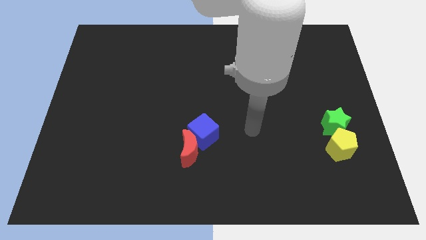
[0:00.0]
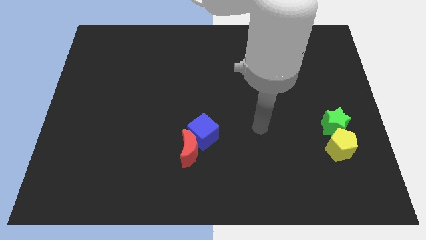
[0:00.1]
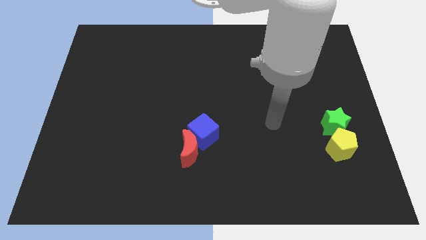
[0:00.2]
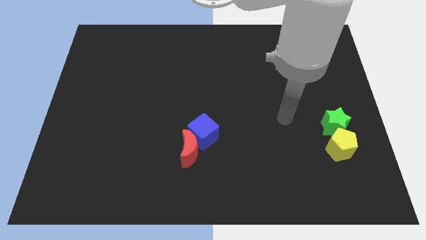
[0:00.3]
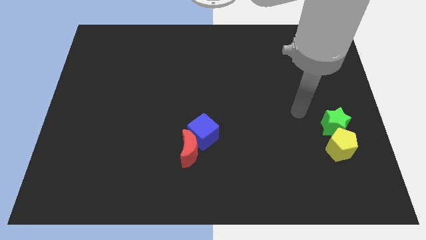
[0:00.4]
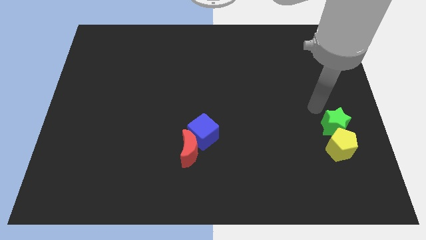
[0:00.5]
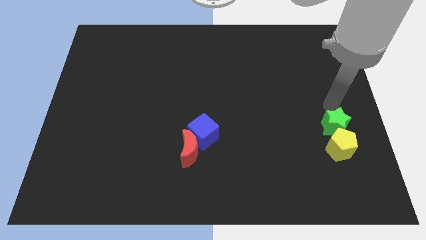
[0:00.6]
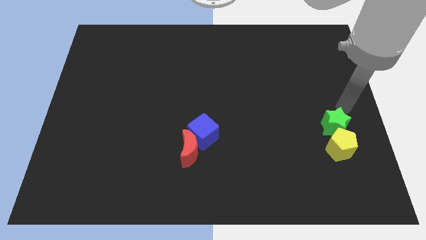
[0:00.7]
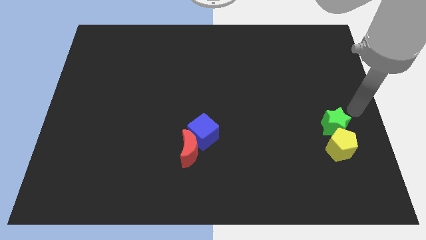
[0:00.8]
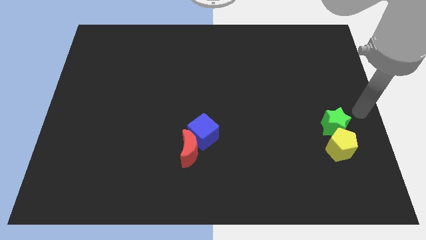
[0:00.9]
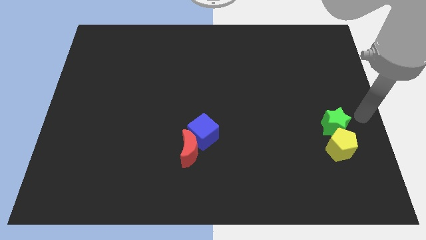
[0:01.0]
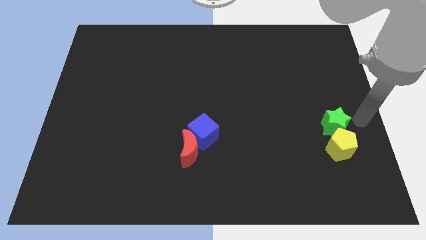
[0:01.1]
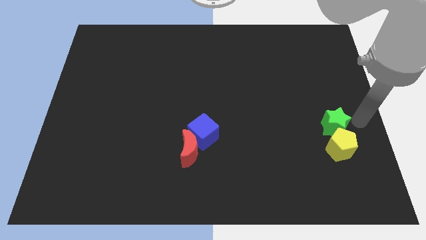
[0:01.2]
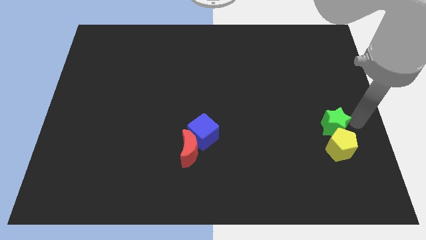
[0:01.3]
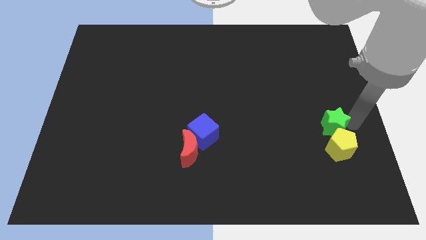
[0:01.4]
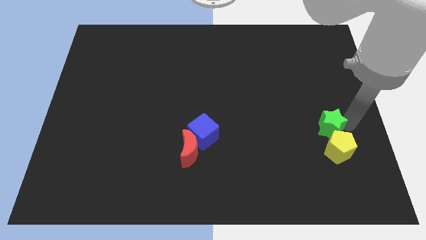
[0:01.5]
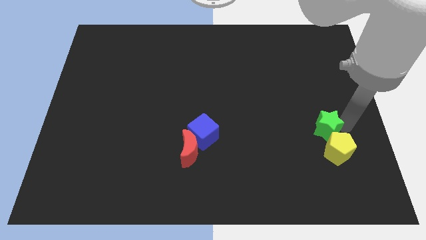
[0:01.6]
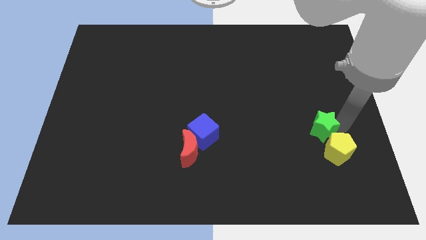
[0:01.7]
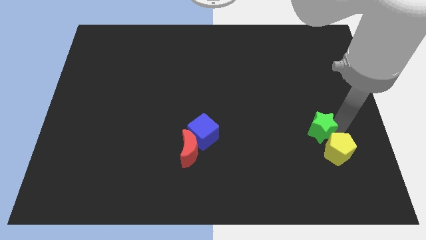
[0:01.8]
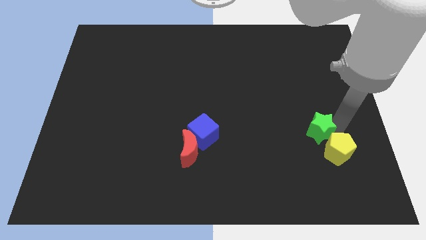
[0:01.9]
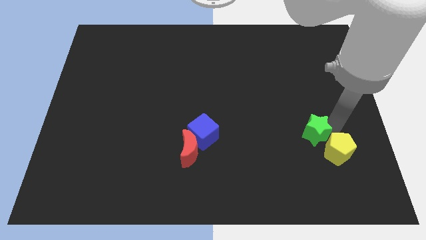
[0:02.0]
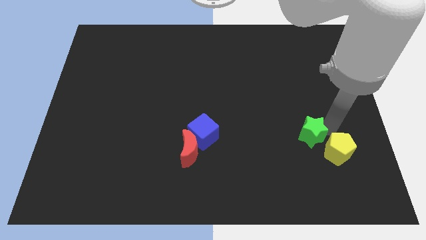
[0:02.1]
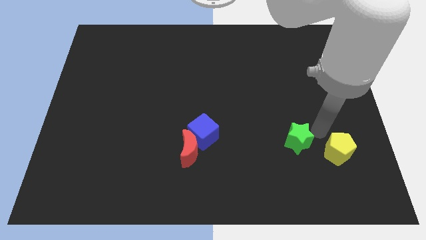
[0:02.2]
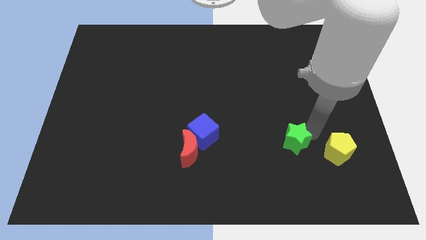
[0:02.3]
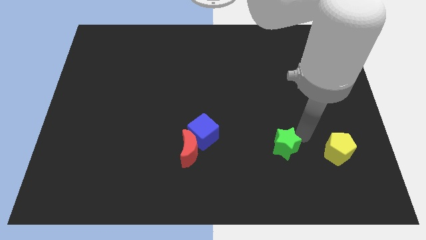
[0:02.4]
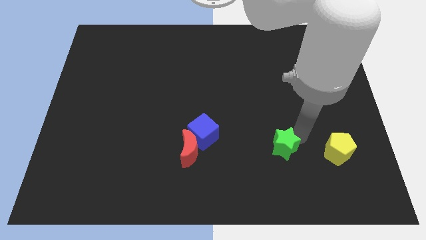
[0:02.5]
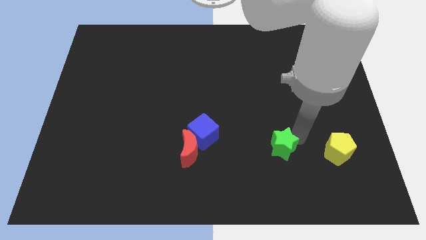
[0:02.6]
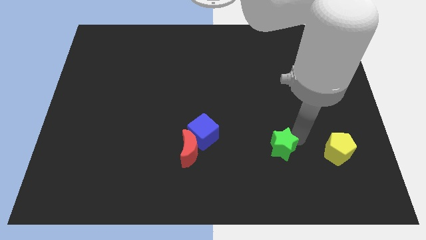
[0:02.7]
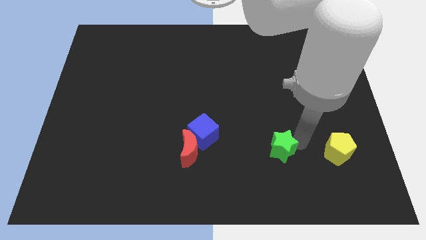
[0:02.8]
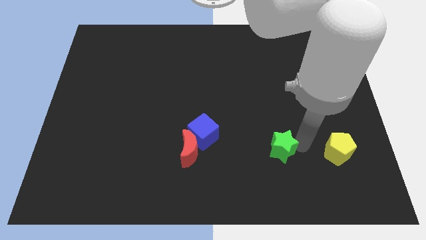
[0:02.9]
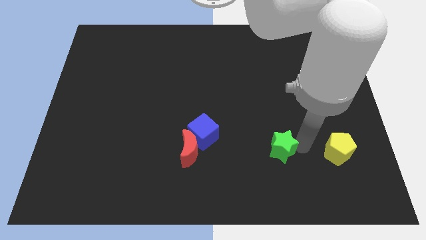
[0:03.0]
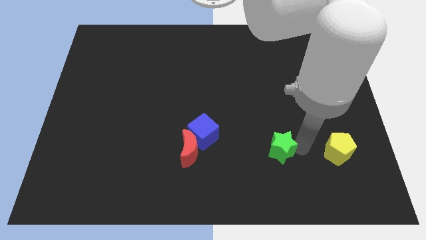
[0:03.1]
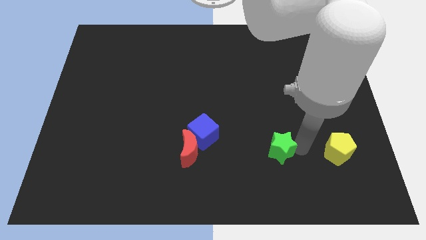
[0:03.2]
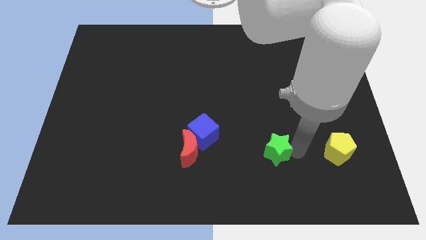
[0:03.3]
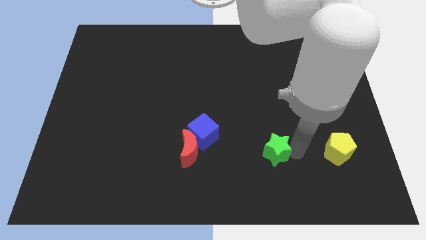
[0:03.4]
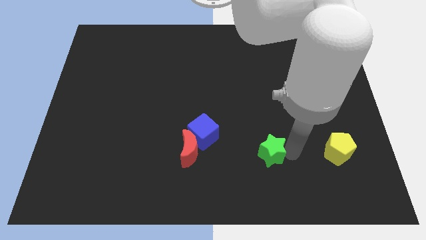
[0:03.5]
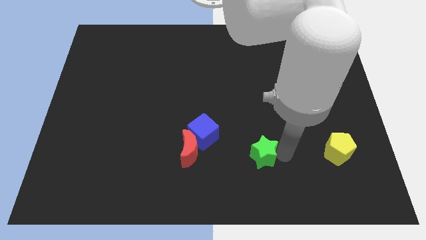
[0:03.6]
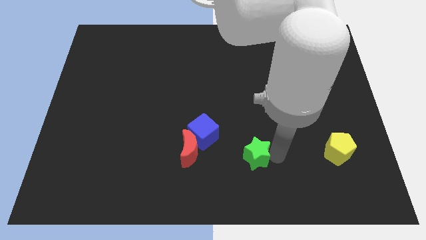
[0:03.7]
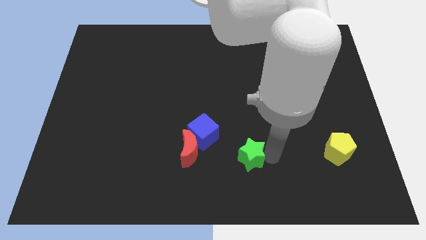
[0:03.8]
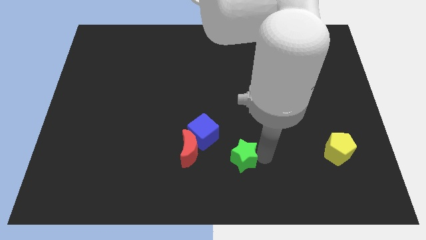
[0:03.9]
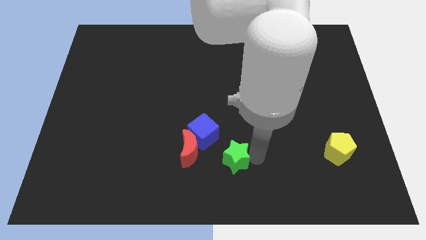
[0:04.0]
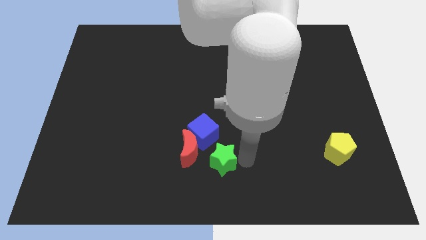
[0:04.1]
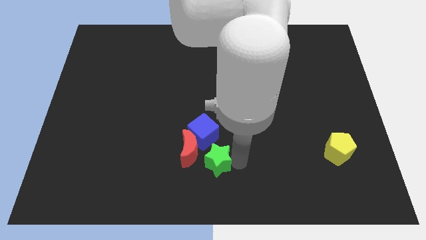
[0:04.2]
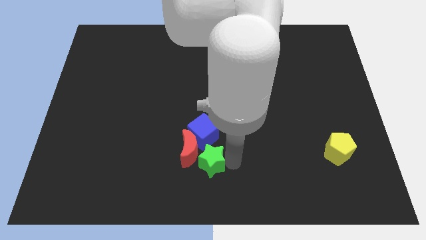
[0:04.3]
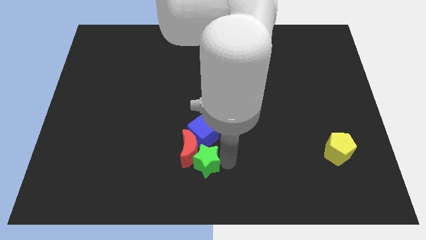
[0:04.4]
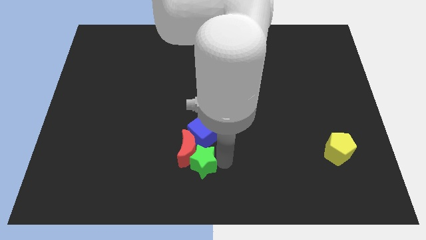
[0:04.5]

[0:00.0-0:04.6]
push the green block to the red moon

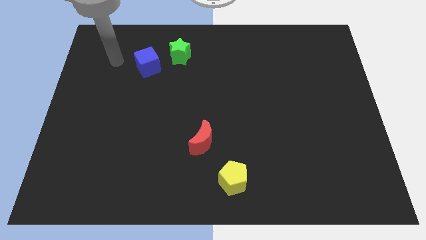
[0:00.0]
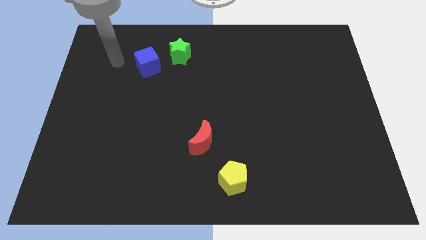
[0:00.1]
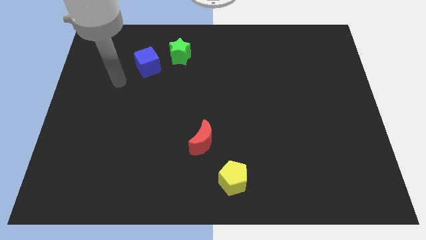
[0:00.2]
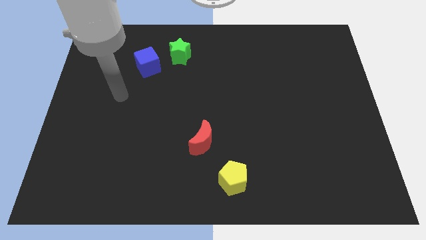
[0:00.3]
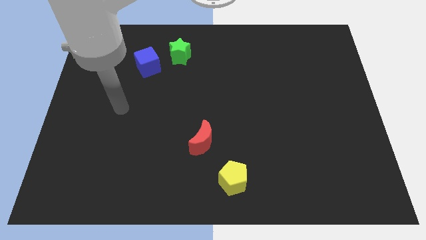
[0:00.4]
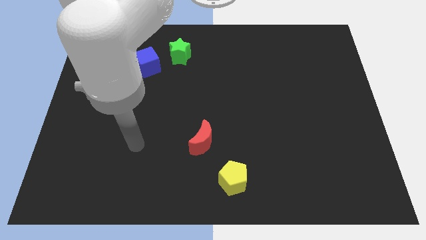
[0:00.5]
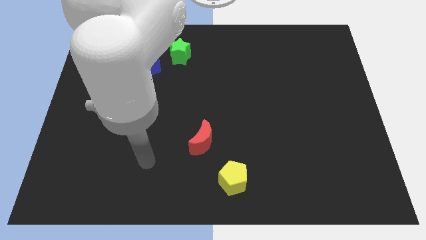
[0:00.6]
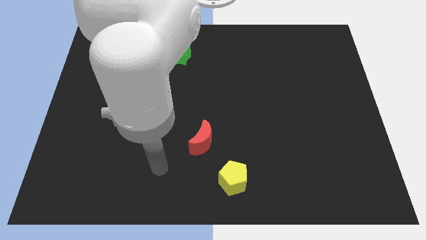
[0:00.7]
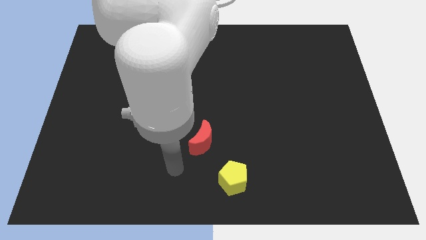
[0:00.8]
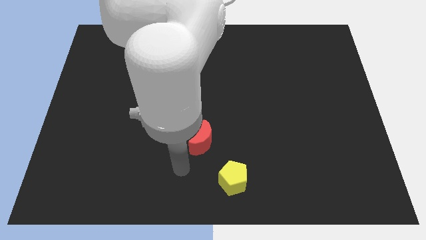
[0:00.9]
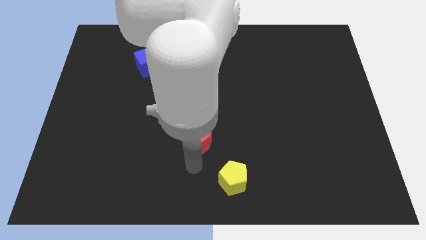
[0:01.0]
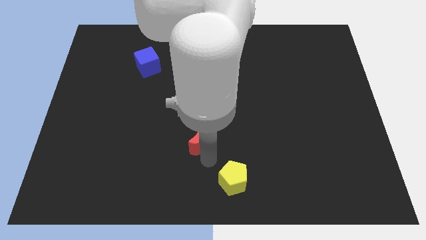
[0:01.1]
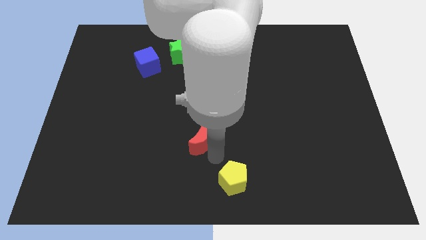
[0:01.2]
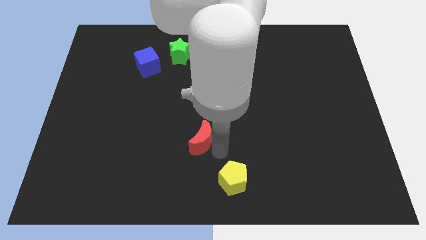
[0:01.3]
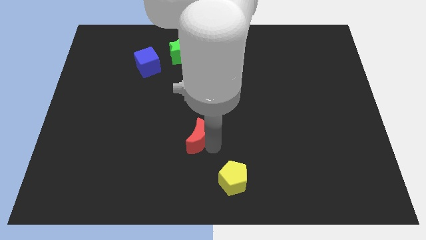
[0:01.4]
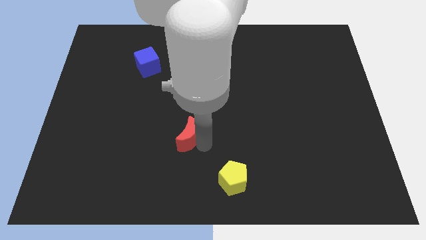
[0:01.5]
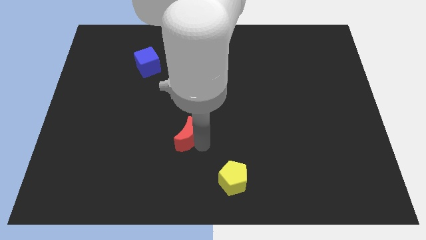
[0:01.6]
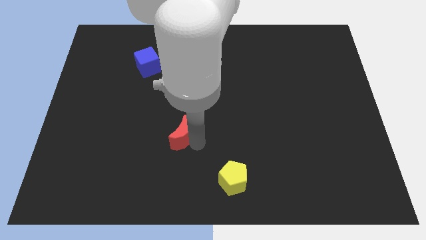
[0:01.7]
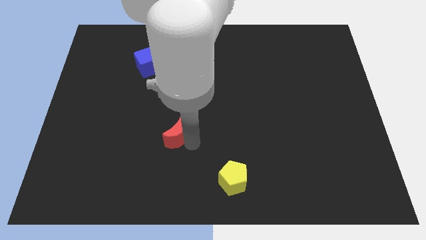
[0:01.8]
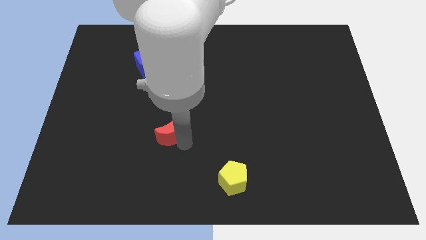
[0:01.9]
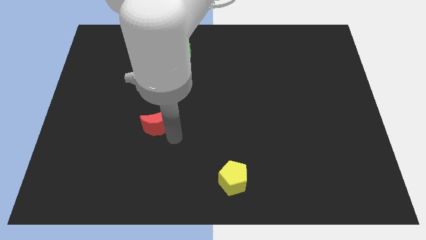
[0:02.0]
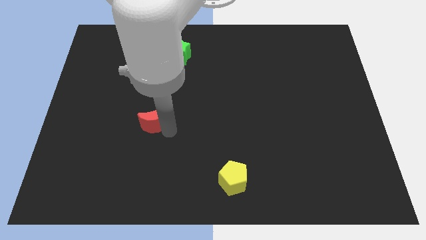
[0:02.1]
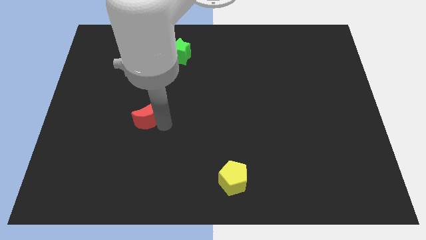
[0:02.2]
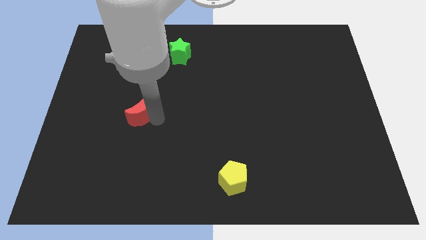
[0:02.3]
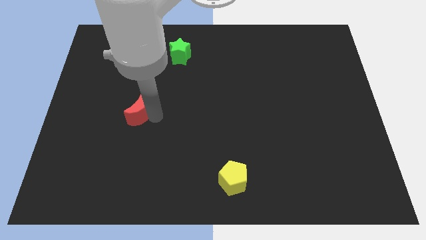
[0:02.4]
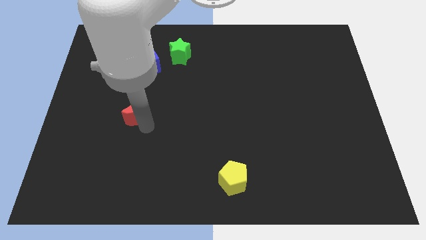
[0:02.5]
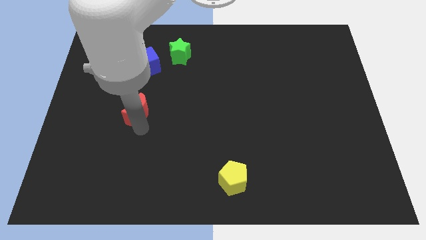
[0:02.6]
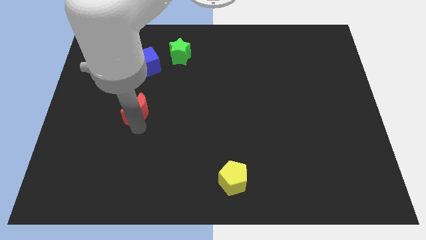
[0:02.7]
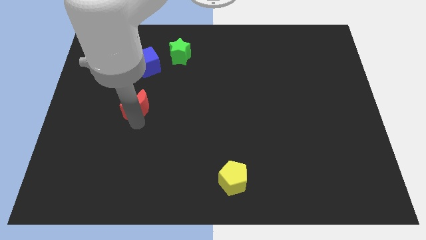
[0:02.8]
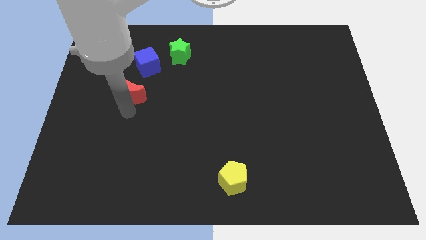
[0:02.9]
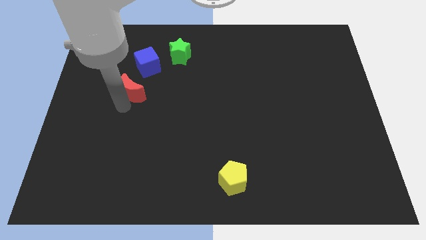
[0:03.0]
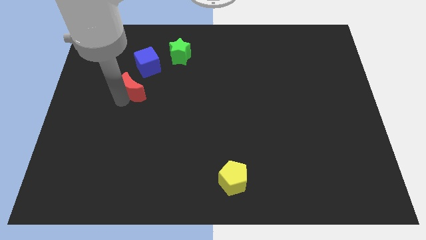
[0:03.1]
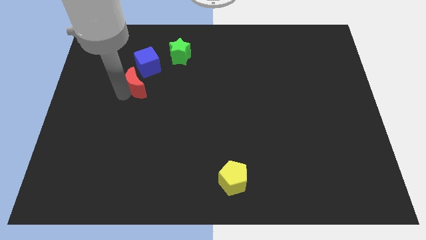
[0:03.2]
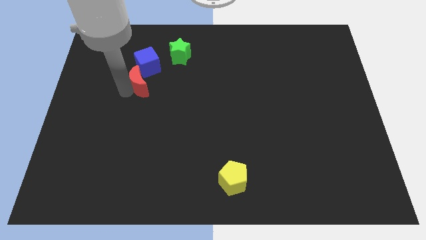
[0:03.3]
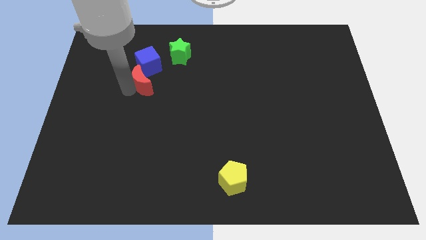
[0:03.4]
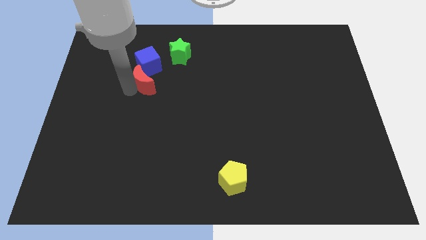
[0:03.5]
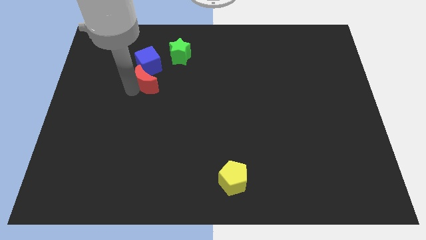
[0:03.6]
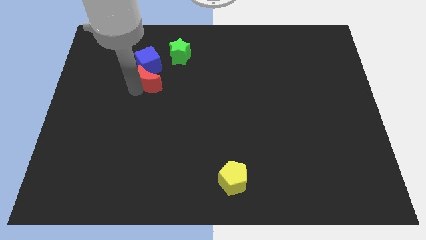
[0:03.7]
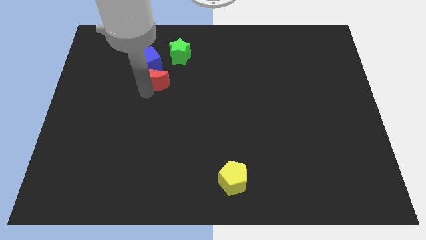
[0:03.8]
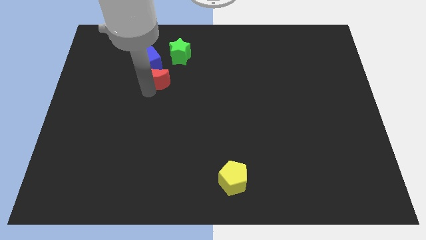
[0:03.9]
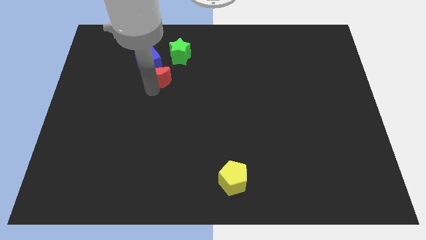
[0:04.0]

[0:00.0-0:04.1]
slide the moon close to the blue cube
